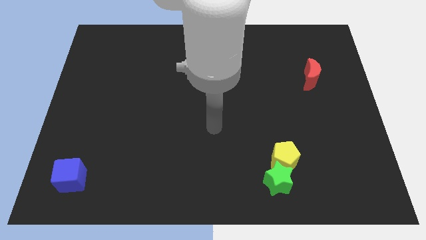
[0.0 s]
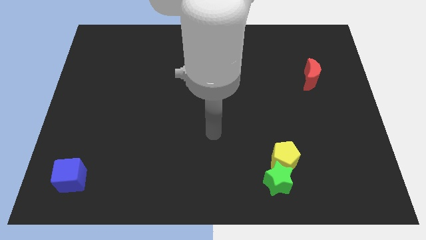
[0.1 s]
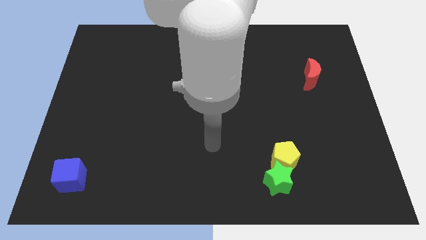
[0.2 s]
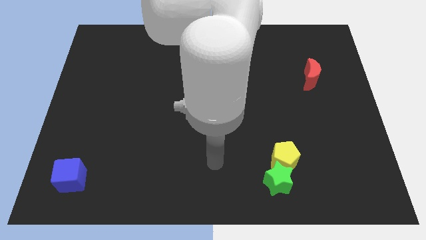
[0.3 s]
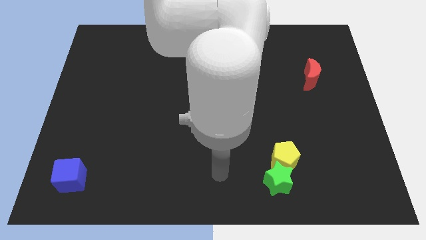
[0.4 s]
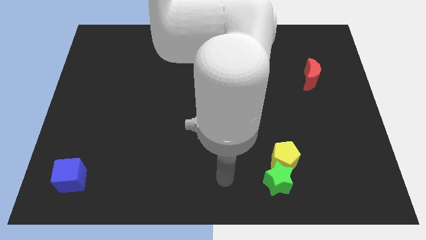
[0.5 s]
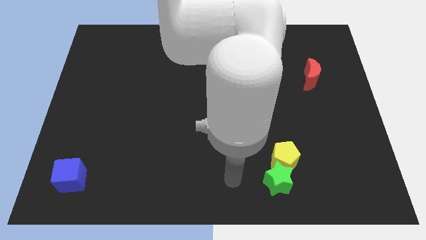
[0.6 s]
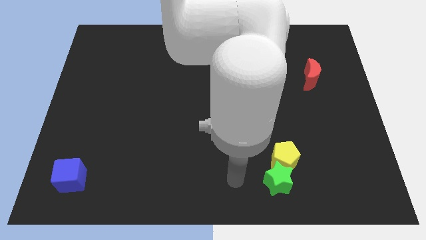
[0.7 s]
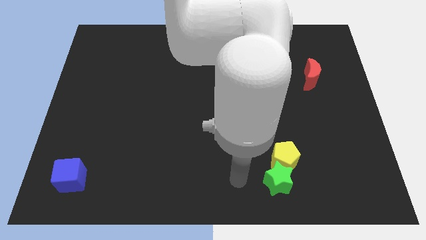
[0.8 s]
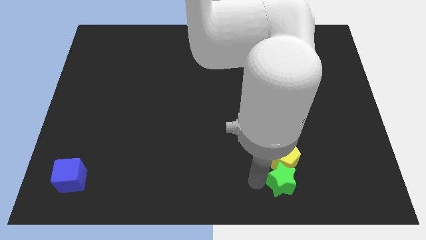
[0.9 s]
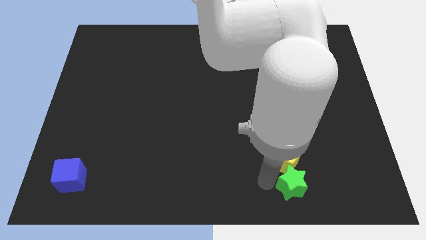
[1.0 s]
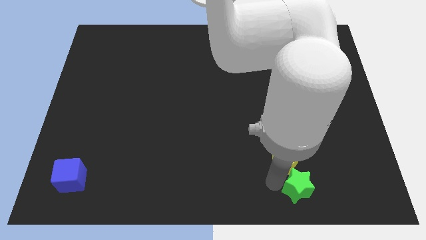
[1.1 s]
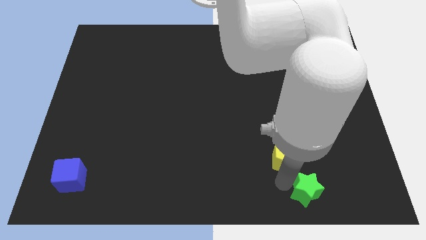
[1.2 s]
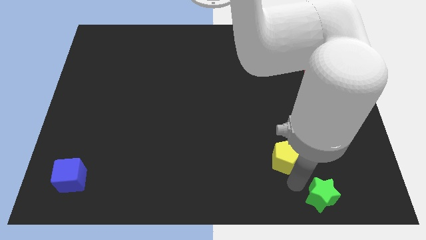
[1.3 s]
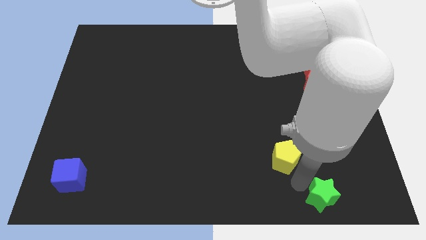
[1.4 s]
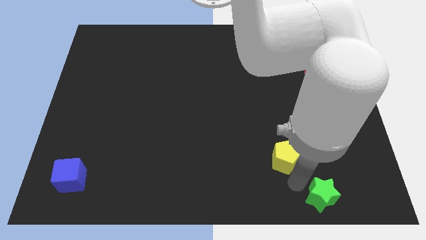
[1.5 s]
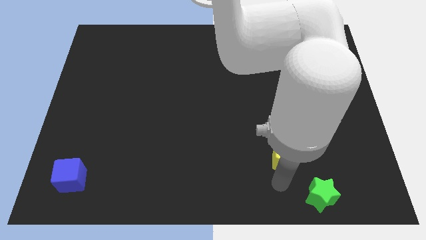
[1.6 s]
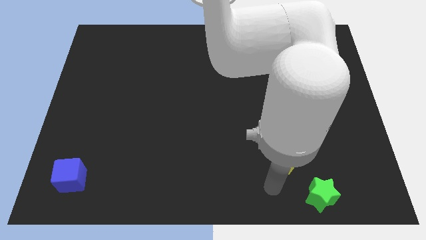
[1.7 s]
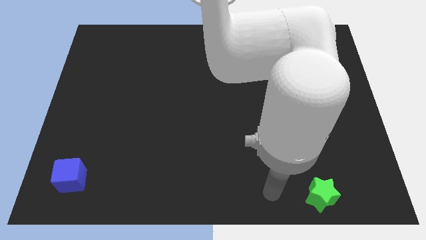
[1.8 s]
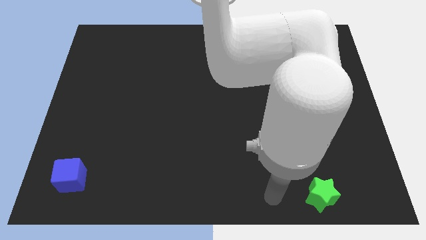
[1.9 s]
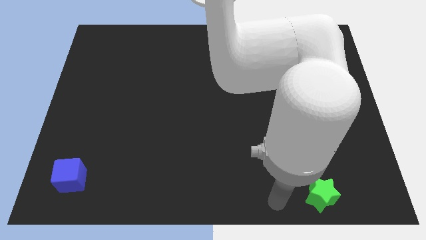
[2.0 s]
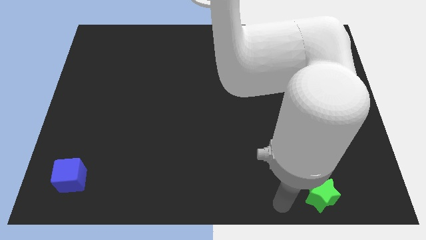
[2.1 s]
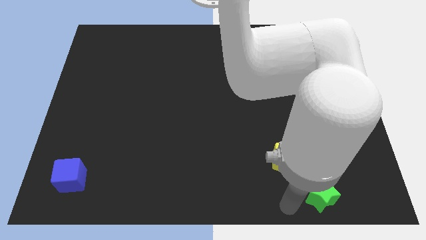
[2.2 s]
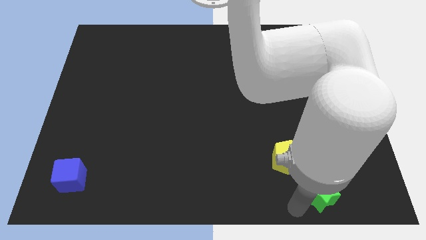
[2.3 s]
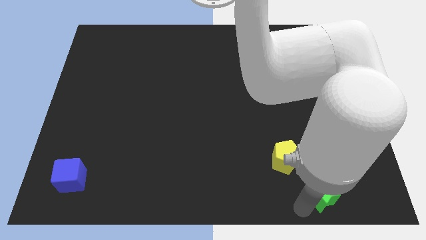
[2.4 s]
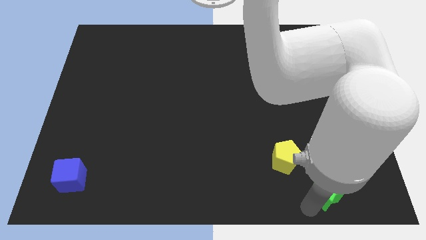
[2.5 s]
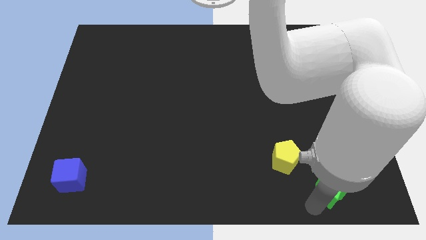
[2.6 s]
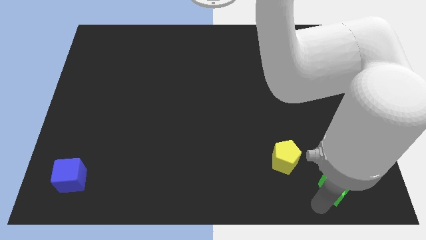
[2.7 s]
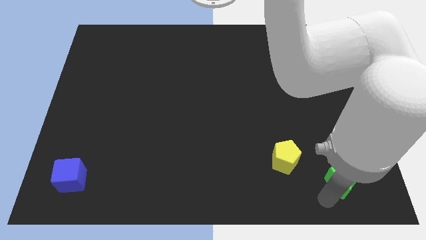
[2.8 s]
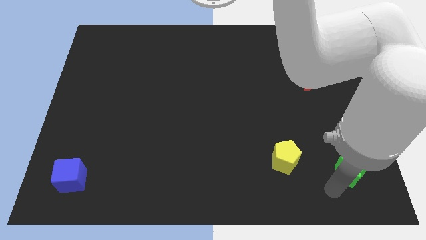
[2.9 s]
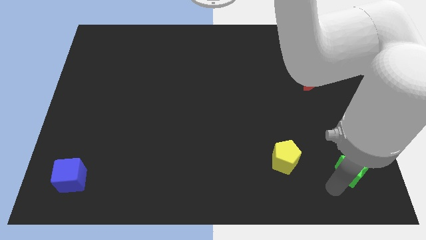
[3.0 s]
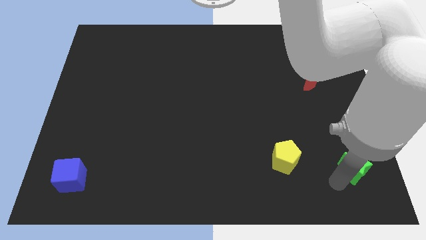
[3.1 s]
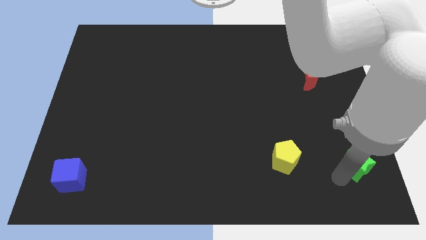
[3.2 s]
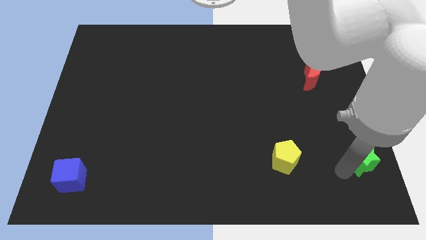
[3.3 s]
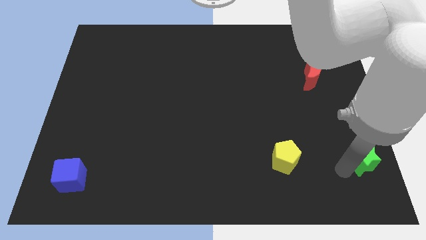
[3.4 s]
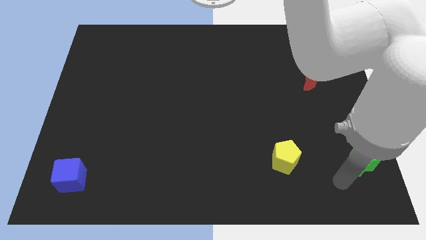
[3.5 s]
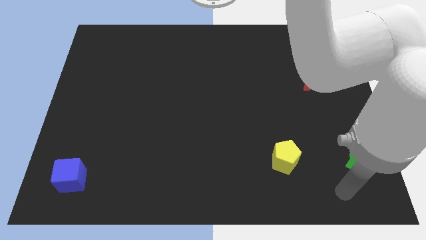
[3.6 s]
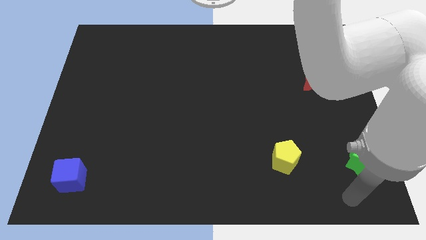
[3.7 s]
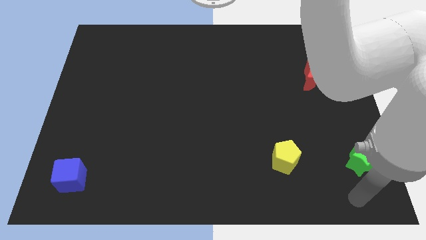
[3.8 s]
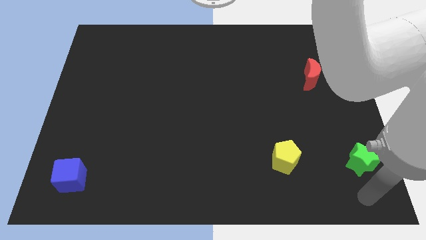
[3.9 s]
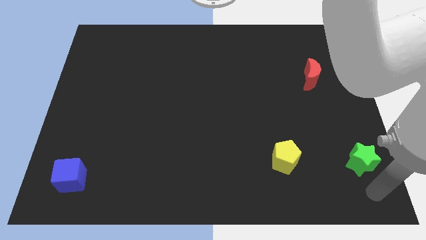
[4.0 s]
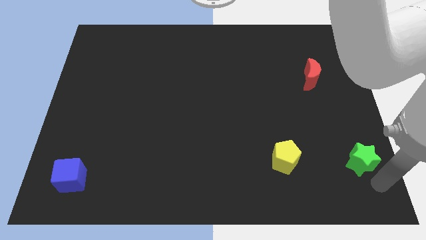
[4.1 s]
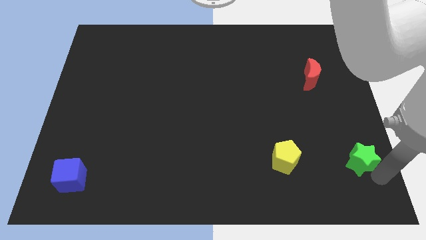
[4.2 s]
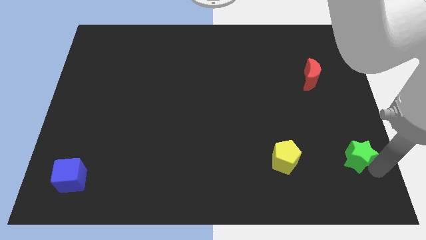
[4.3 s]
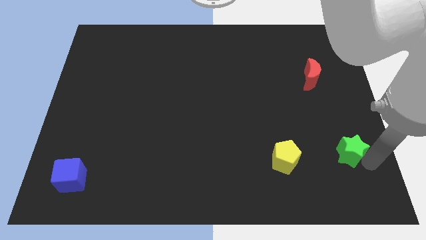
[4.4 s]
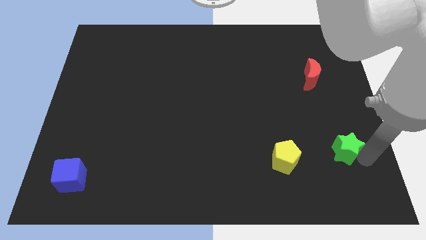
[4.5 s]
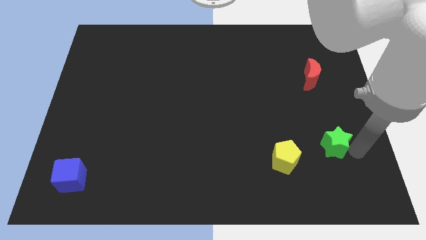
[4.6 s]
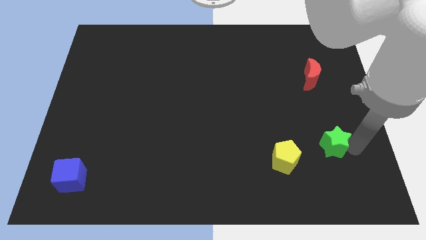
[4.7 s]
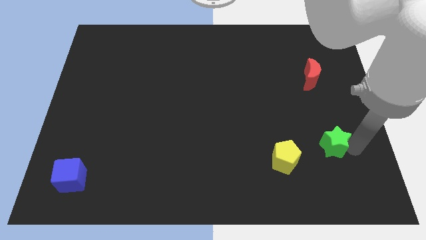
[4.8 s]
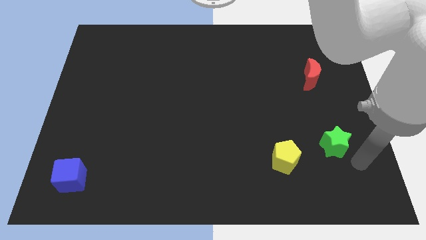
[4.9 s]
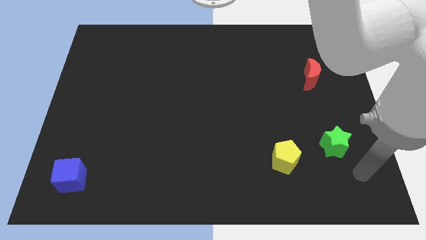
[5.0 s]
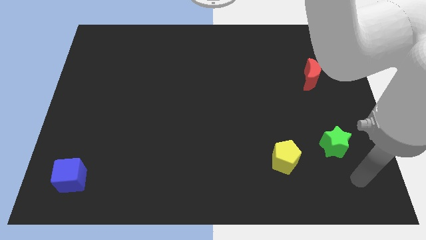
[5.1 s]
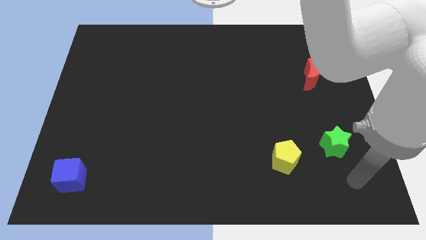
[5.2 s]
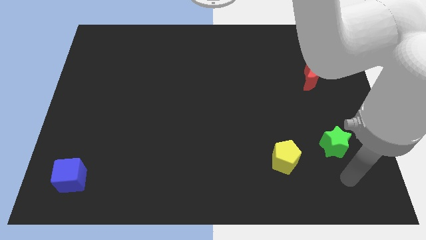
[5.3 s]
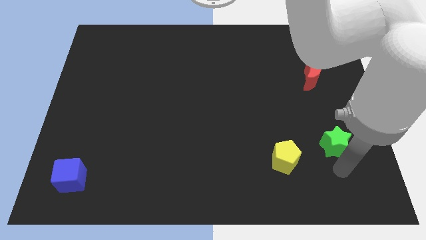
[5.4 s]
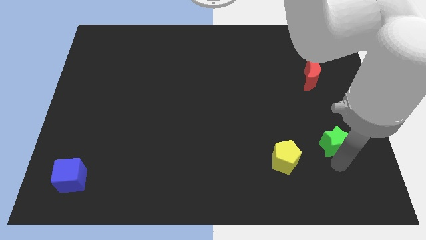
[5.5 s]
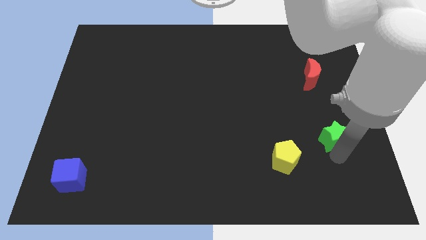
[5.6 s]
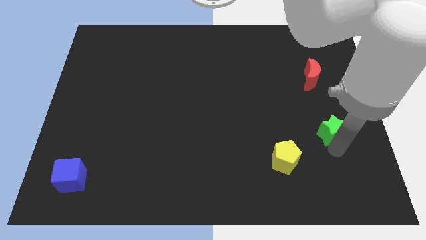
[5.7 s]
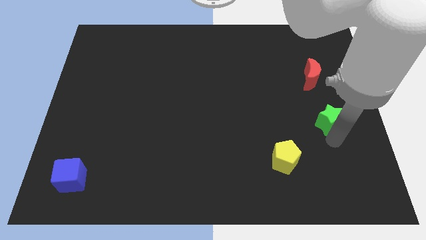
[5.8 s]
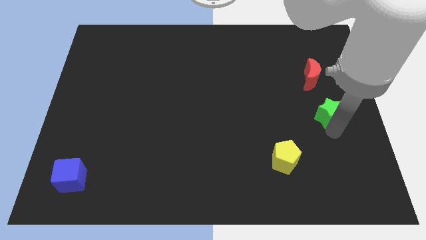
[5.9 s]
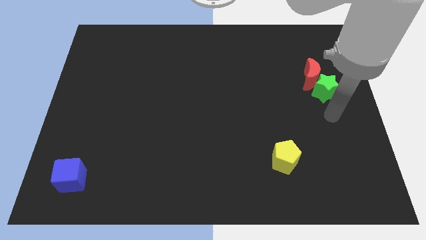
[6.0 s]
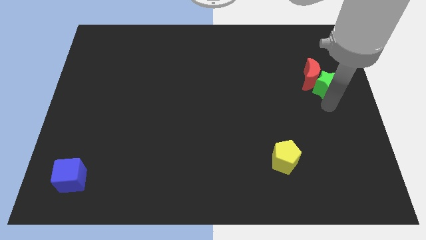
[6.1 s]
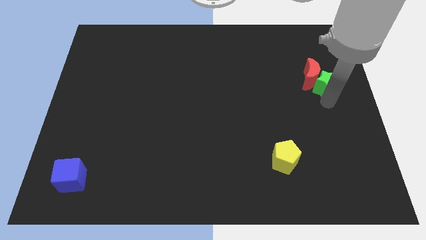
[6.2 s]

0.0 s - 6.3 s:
slide the green star to the moon

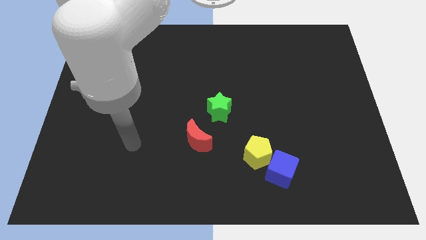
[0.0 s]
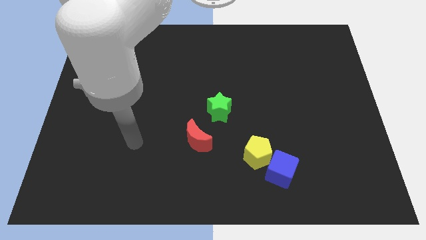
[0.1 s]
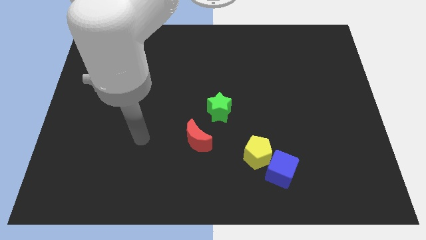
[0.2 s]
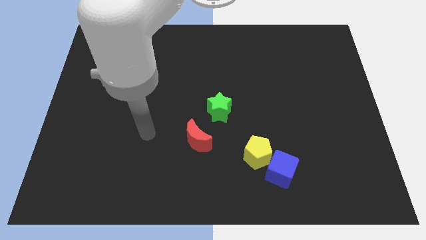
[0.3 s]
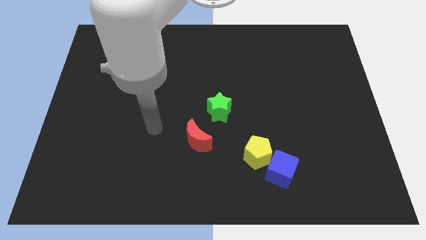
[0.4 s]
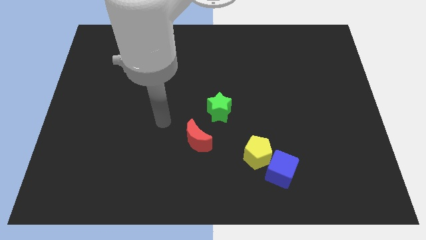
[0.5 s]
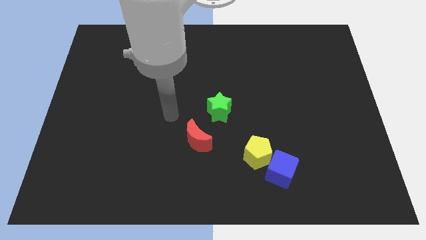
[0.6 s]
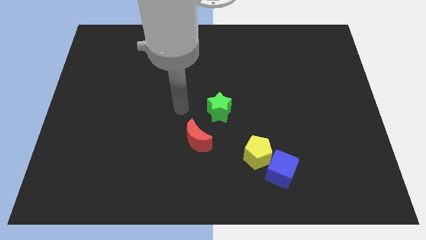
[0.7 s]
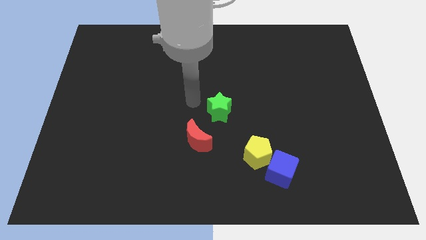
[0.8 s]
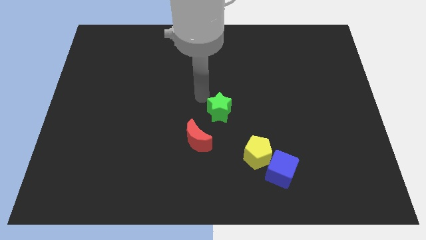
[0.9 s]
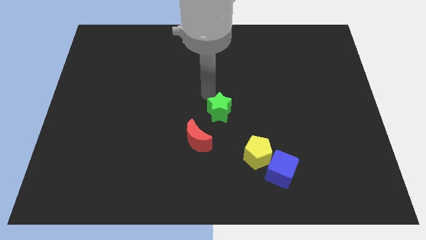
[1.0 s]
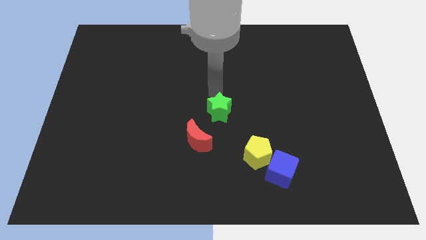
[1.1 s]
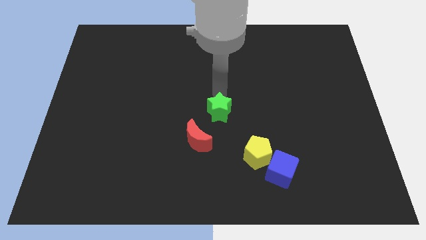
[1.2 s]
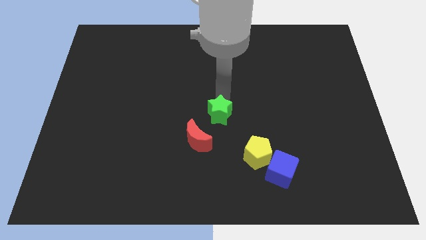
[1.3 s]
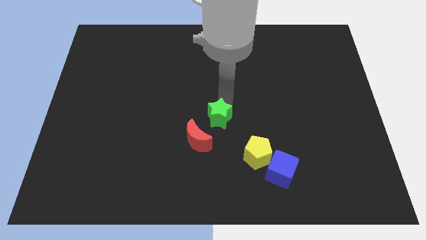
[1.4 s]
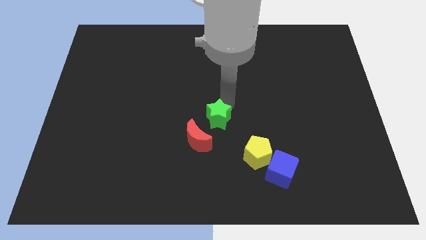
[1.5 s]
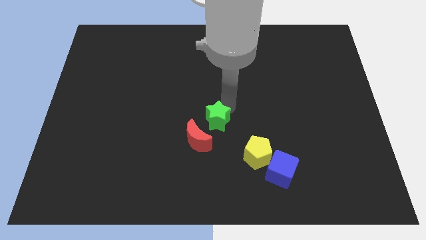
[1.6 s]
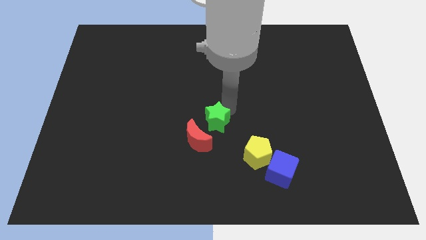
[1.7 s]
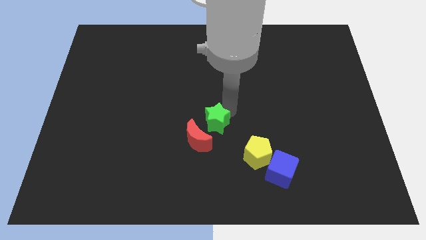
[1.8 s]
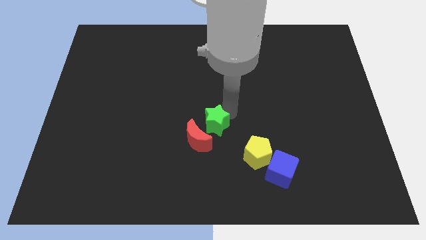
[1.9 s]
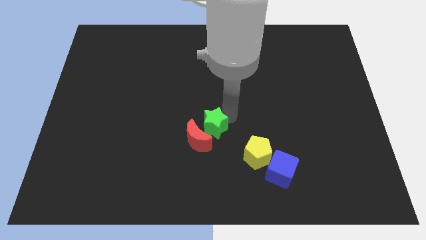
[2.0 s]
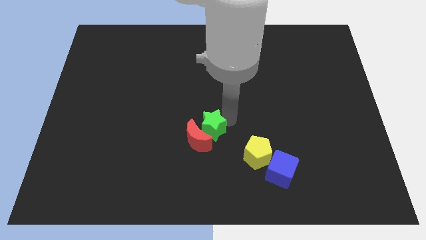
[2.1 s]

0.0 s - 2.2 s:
move the green block next to the moon
